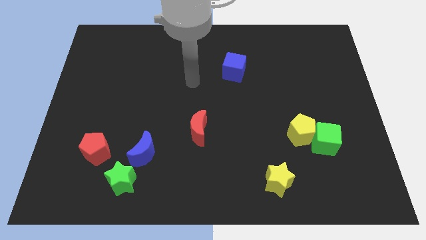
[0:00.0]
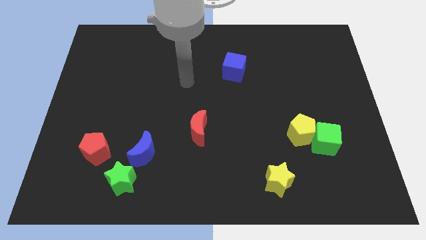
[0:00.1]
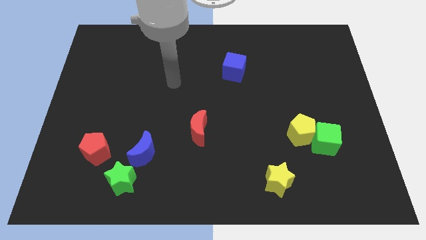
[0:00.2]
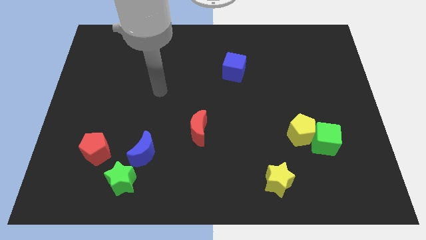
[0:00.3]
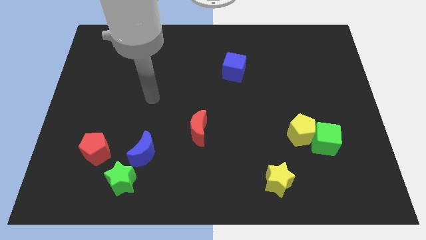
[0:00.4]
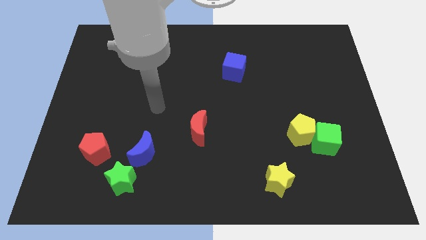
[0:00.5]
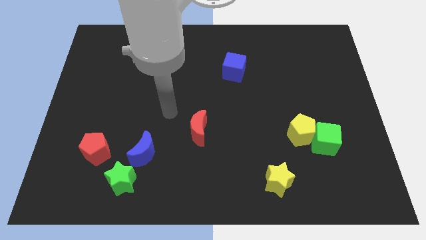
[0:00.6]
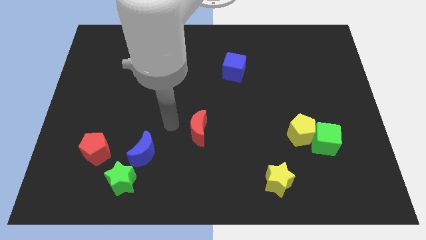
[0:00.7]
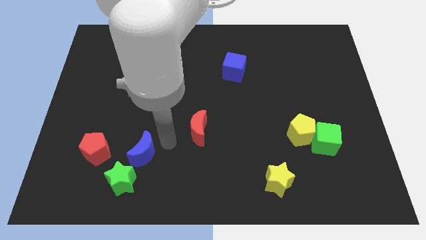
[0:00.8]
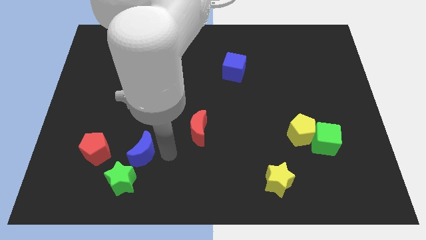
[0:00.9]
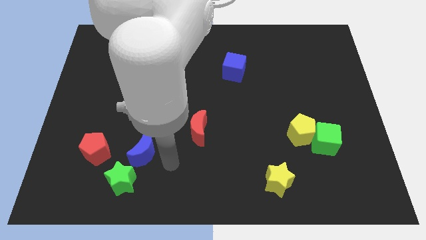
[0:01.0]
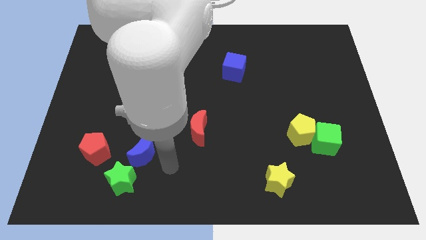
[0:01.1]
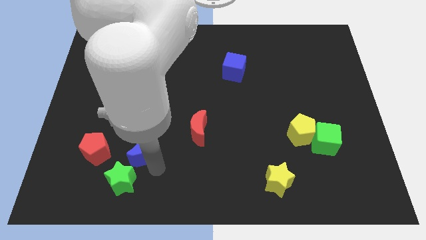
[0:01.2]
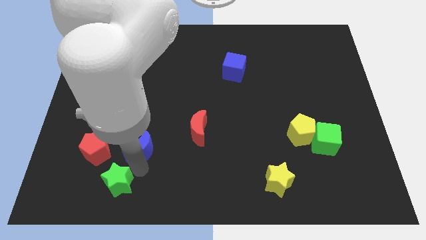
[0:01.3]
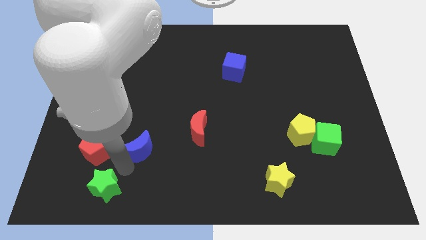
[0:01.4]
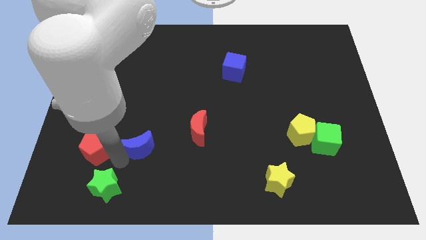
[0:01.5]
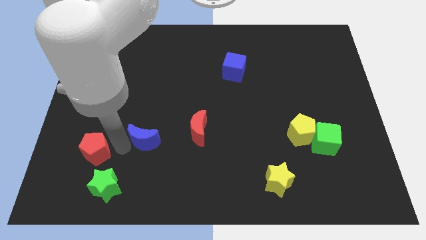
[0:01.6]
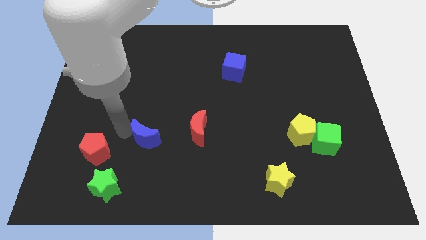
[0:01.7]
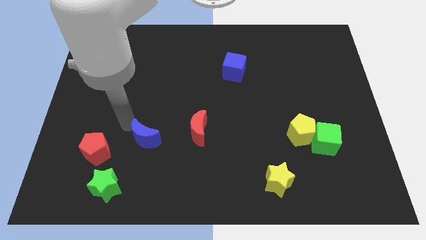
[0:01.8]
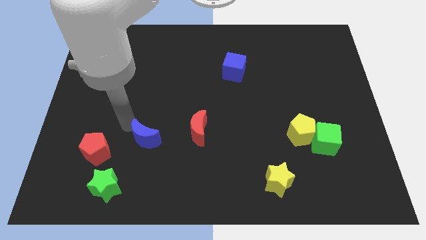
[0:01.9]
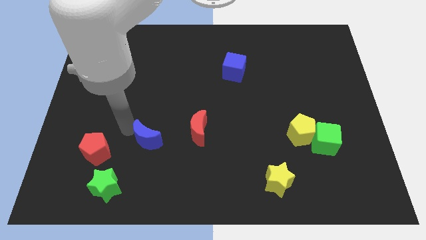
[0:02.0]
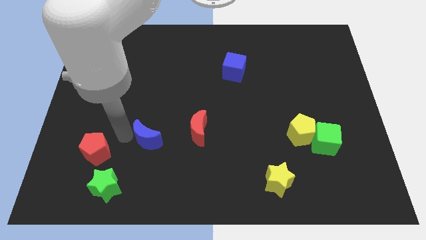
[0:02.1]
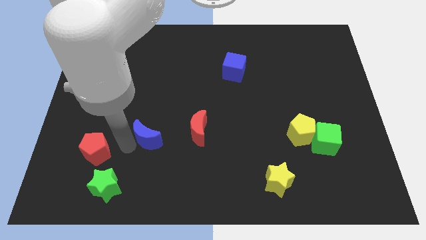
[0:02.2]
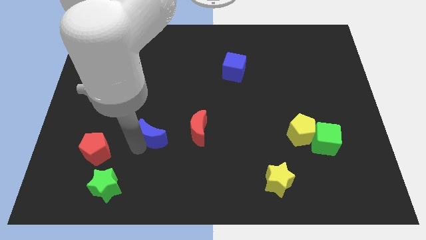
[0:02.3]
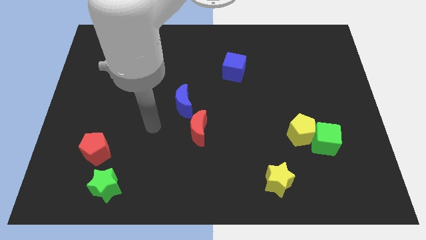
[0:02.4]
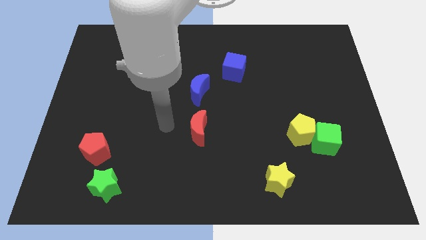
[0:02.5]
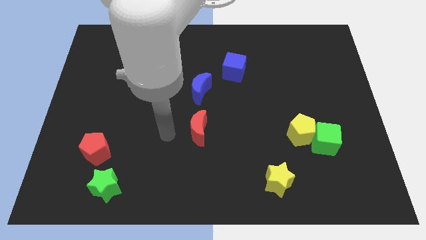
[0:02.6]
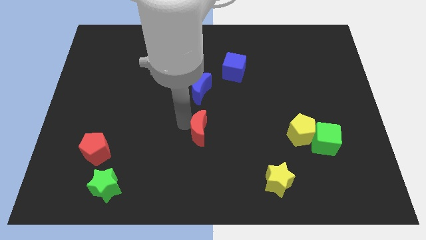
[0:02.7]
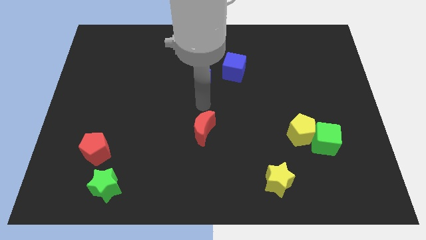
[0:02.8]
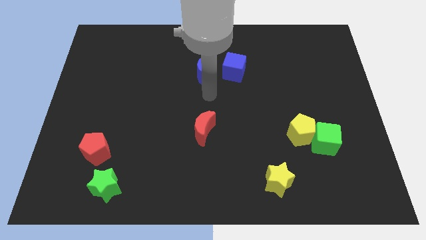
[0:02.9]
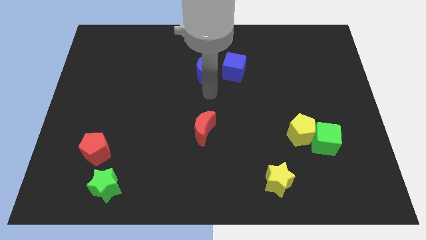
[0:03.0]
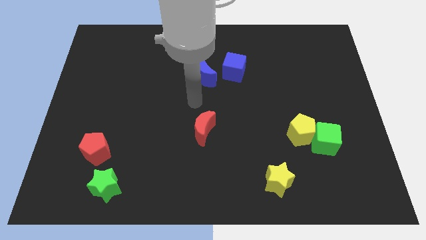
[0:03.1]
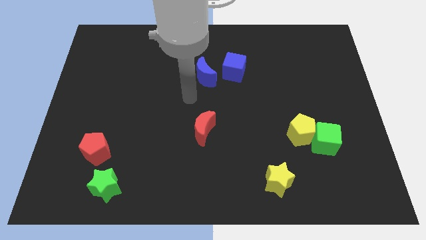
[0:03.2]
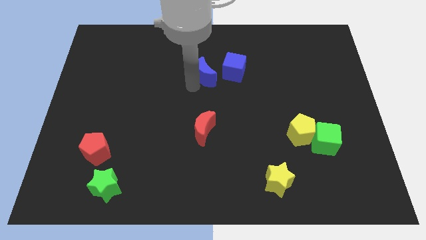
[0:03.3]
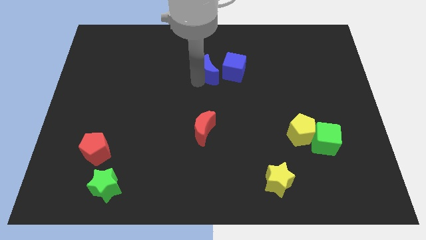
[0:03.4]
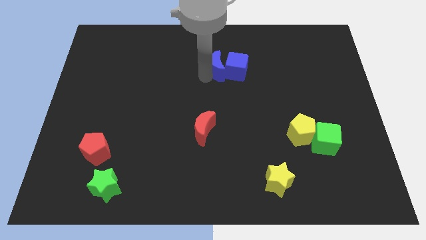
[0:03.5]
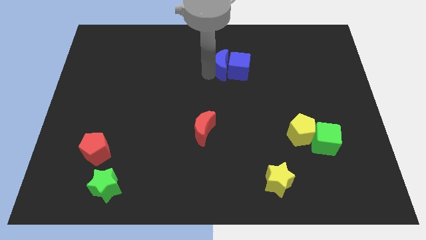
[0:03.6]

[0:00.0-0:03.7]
put the blue moon towards the blue cube

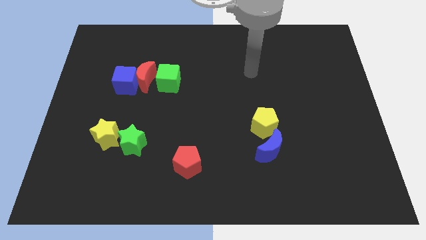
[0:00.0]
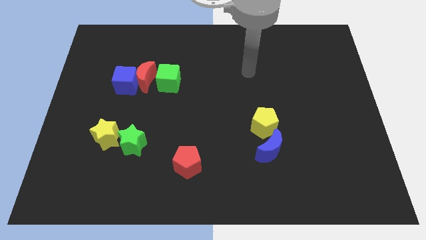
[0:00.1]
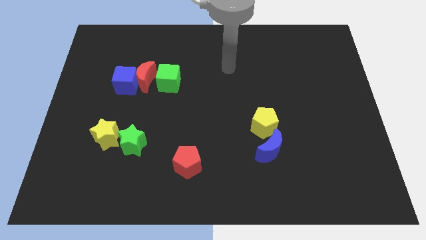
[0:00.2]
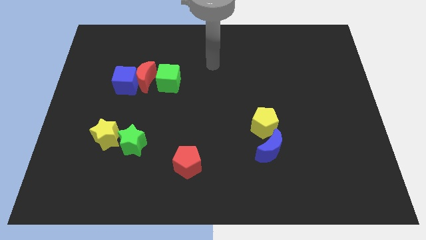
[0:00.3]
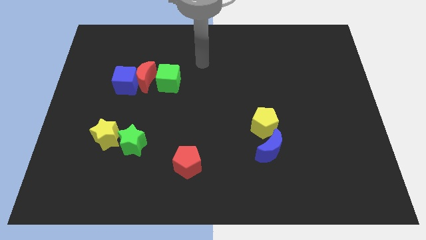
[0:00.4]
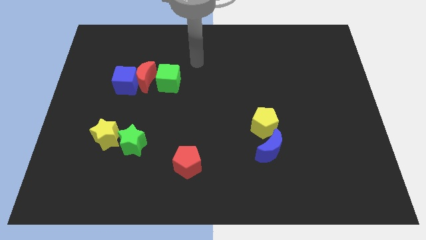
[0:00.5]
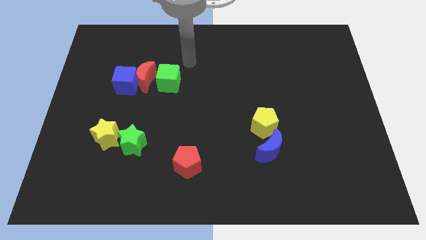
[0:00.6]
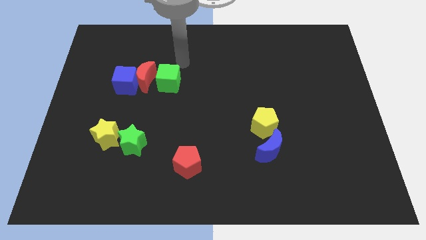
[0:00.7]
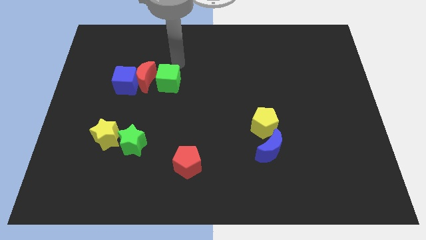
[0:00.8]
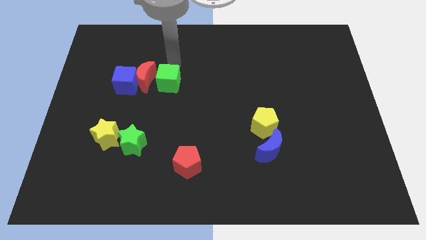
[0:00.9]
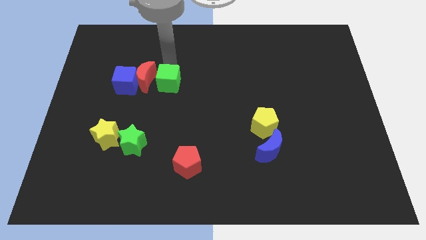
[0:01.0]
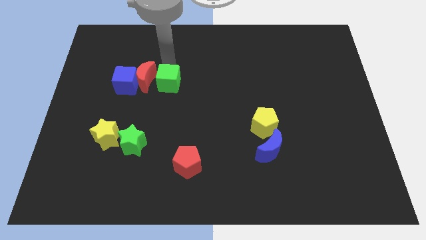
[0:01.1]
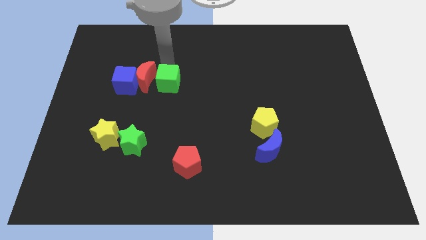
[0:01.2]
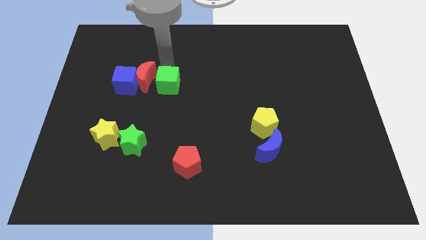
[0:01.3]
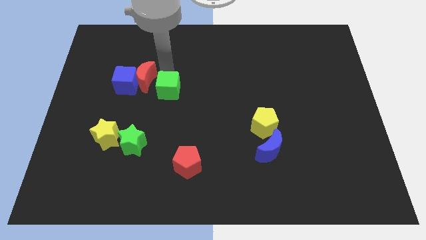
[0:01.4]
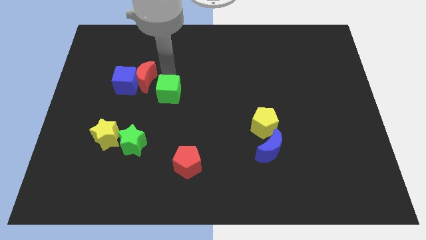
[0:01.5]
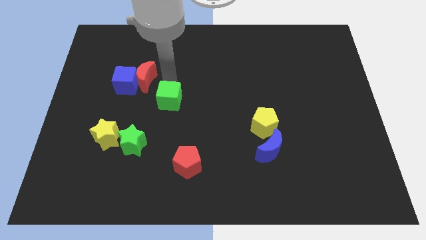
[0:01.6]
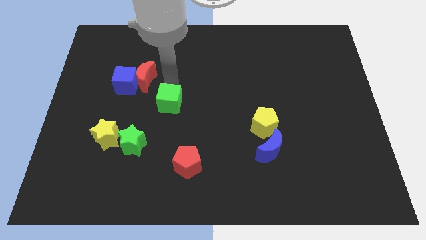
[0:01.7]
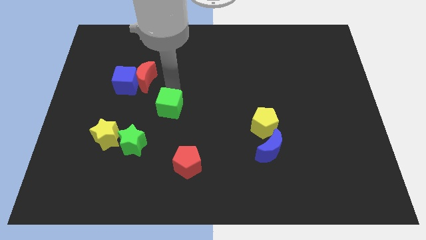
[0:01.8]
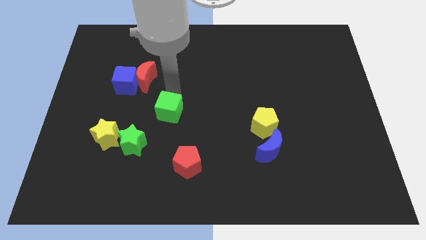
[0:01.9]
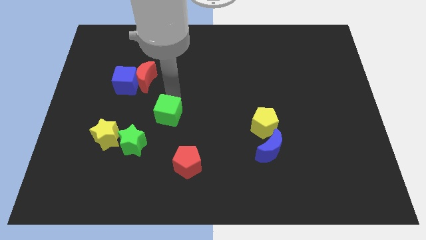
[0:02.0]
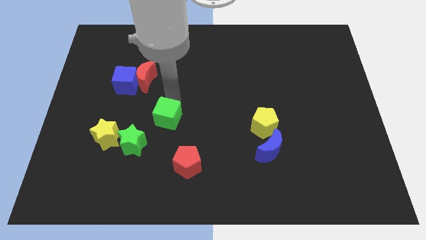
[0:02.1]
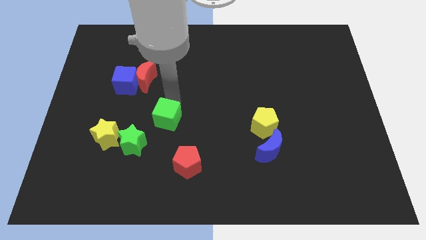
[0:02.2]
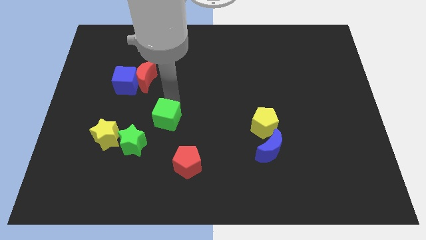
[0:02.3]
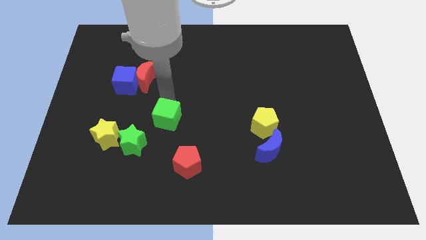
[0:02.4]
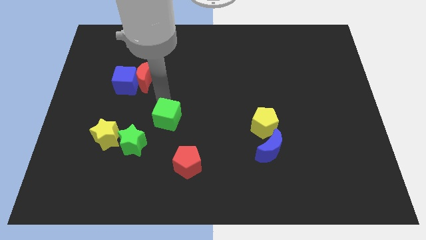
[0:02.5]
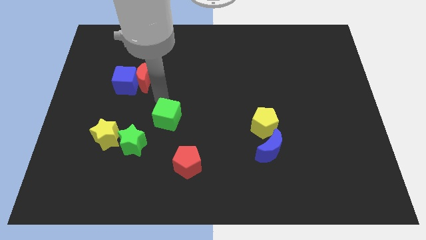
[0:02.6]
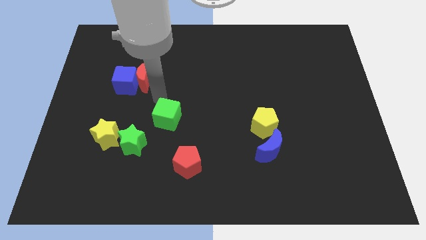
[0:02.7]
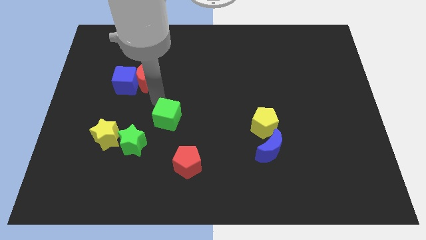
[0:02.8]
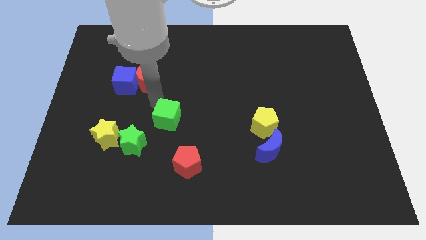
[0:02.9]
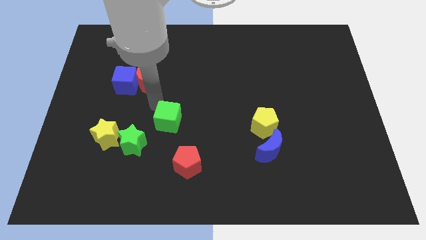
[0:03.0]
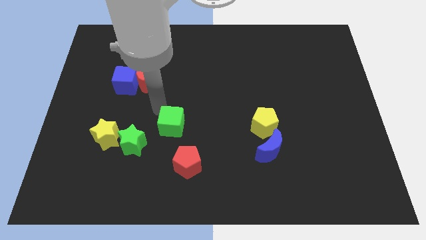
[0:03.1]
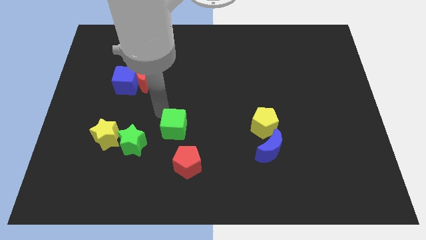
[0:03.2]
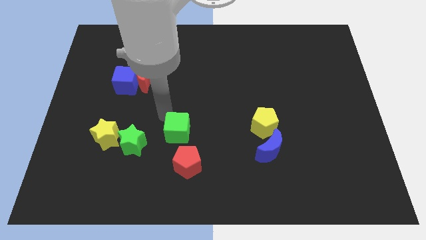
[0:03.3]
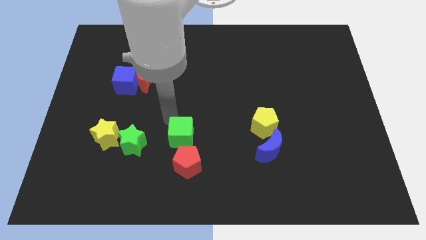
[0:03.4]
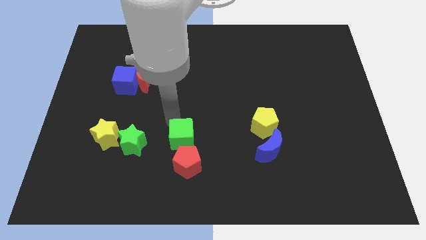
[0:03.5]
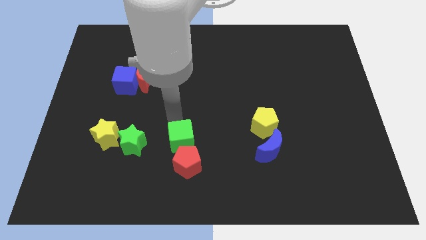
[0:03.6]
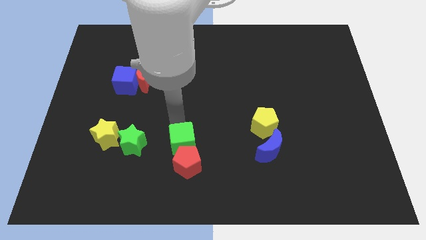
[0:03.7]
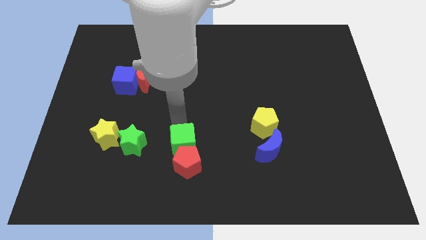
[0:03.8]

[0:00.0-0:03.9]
slide the green cube to the red pentagon

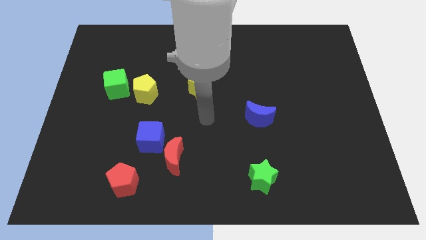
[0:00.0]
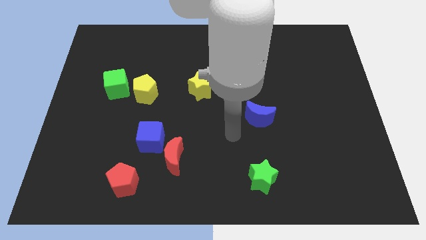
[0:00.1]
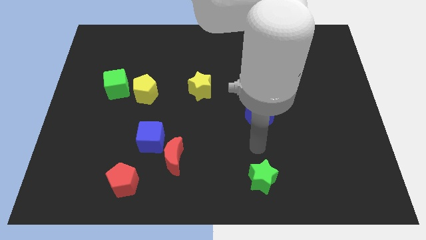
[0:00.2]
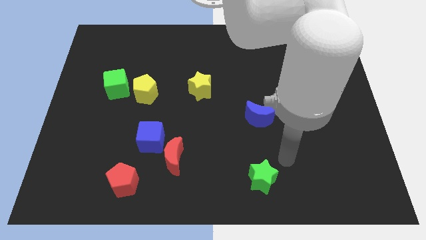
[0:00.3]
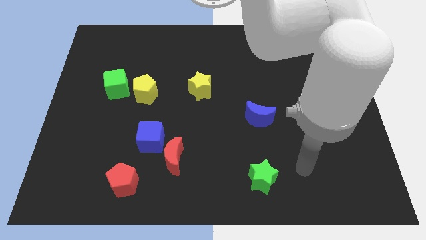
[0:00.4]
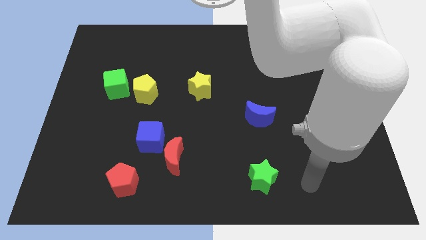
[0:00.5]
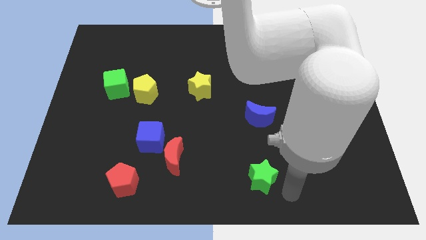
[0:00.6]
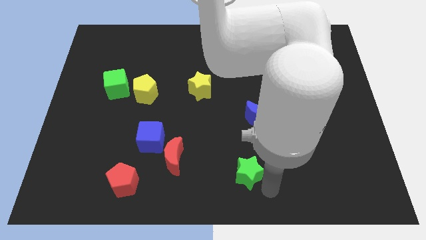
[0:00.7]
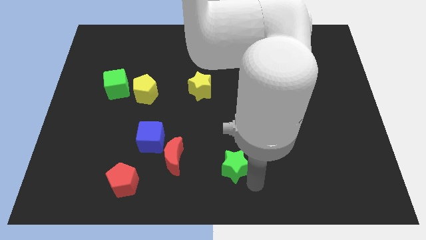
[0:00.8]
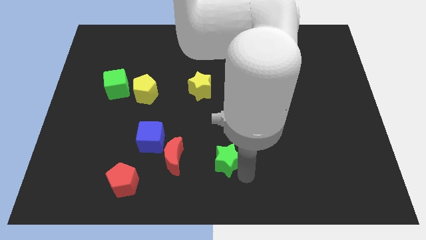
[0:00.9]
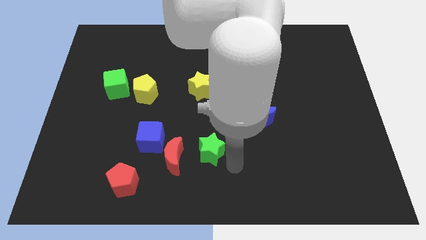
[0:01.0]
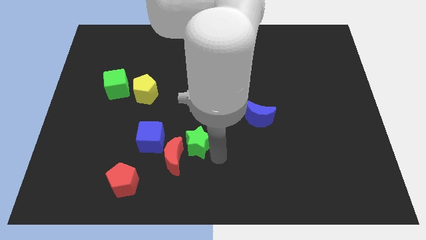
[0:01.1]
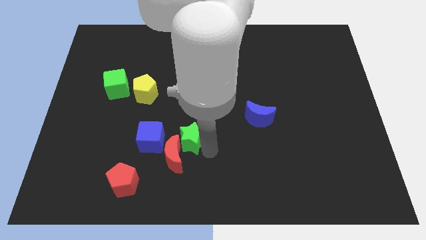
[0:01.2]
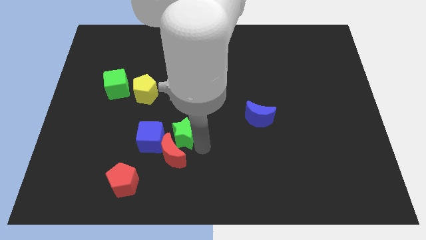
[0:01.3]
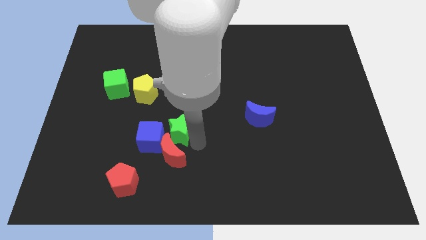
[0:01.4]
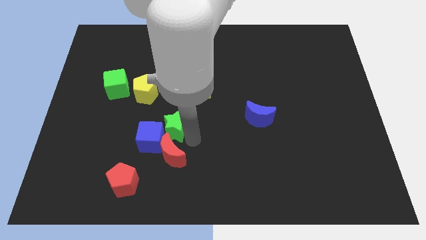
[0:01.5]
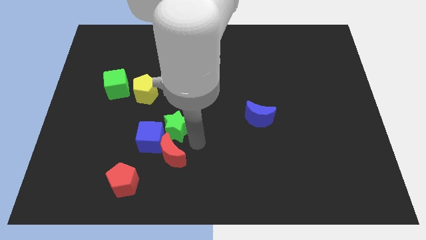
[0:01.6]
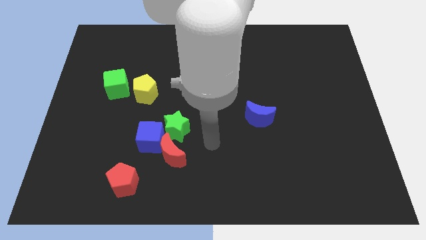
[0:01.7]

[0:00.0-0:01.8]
move the green star next to the blue cube
